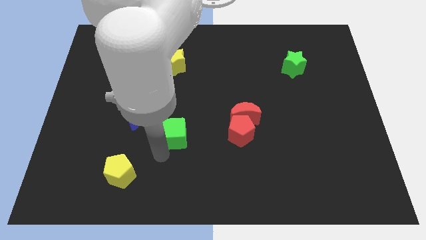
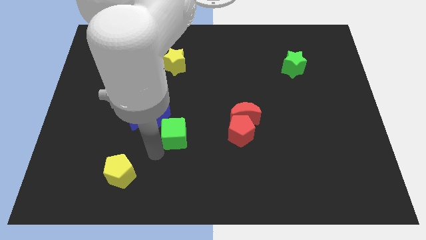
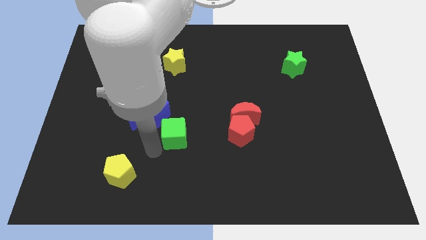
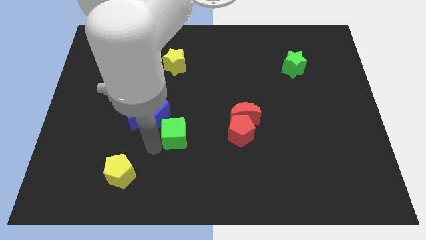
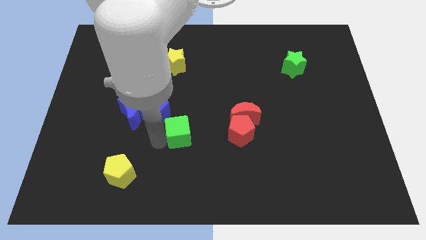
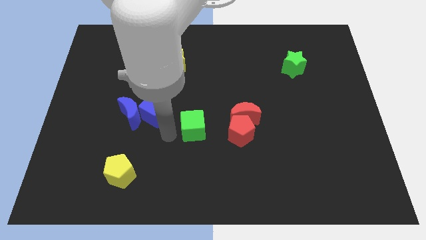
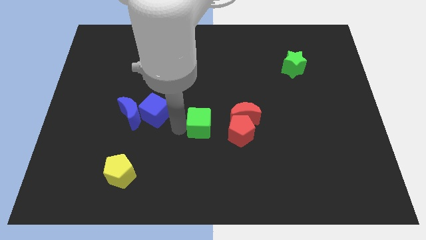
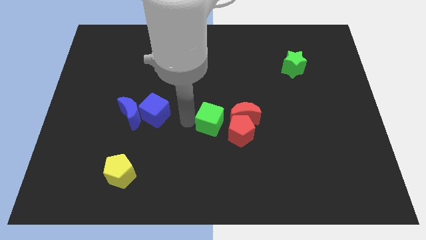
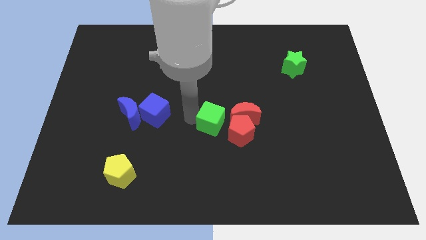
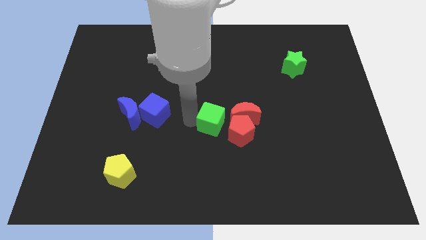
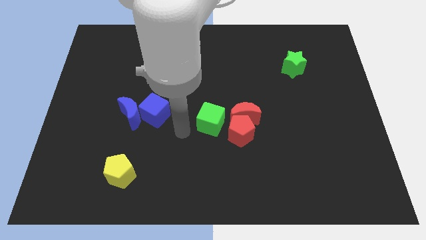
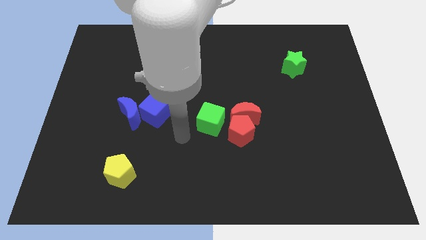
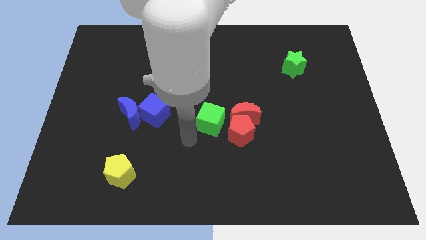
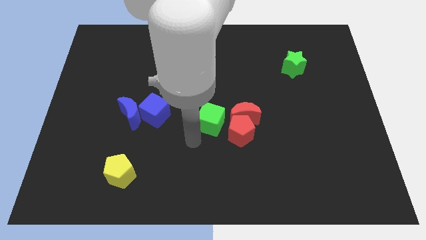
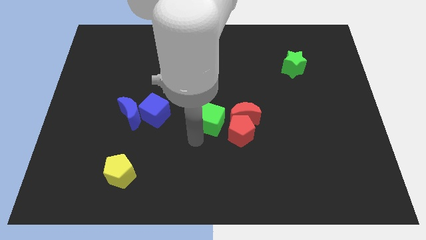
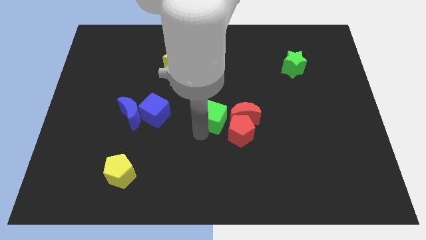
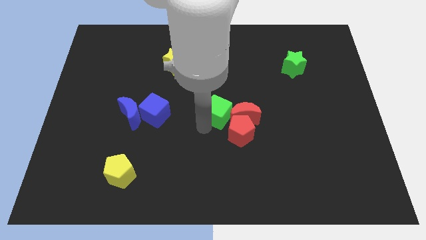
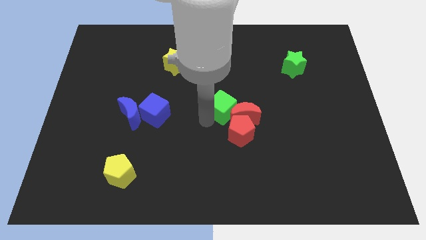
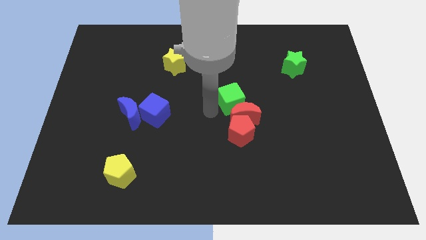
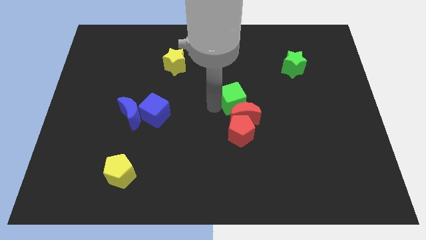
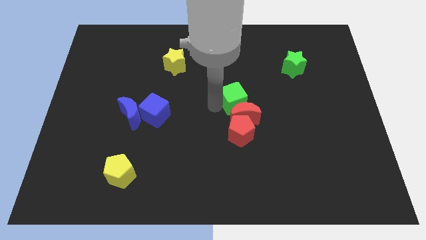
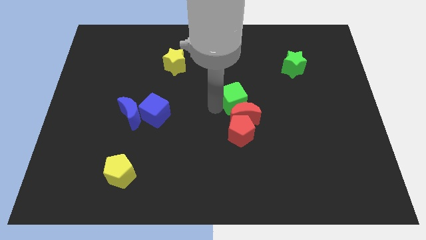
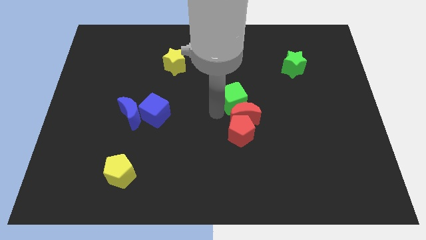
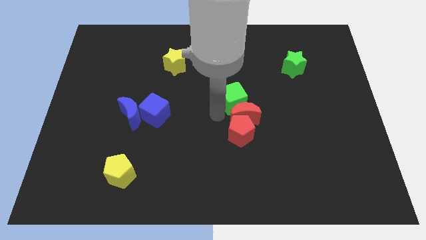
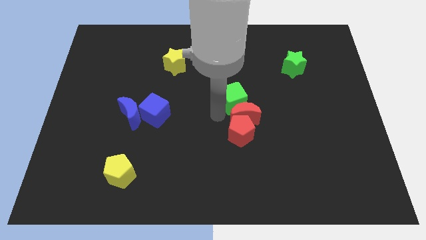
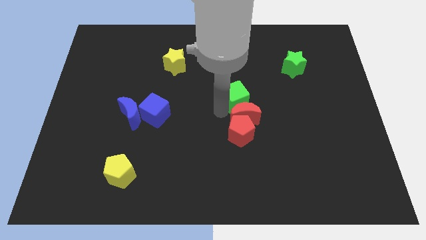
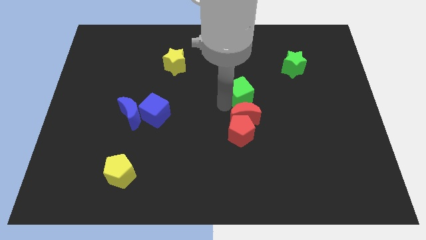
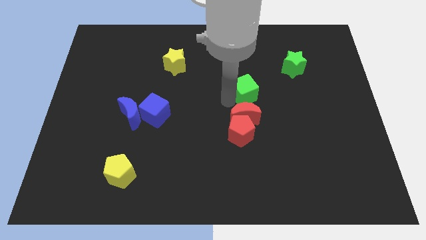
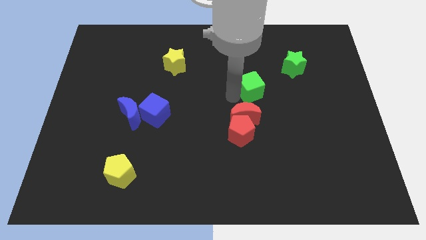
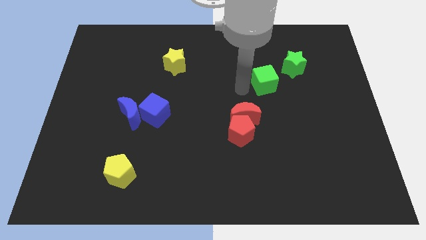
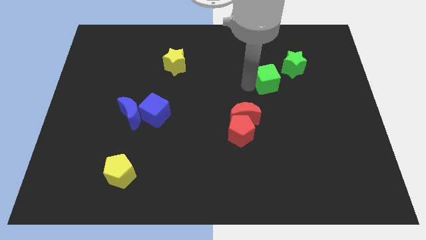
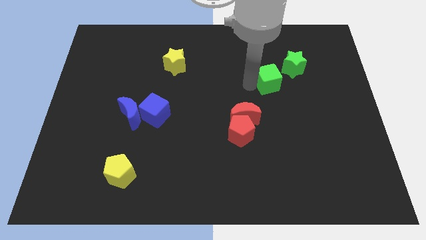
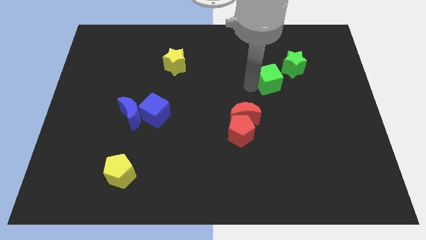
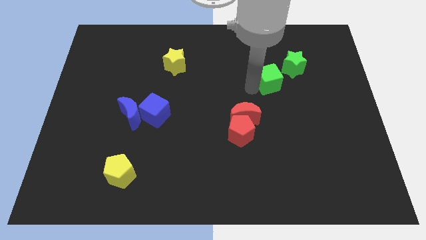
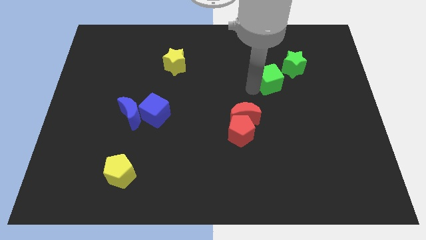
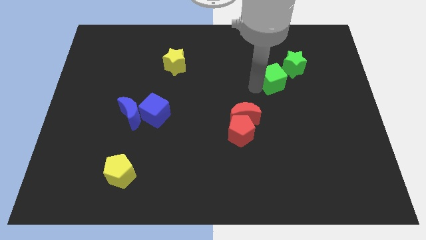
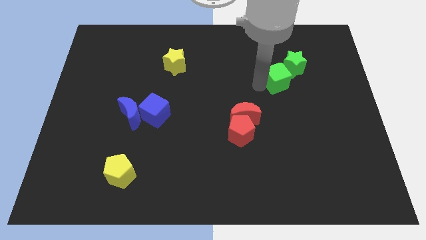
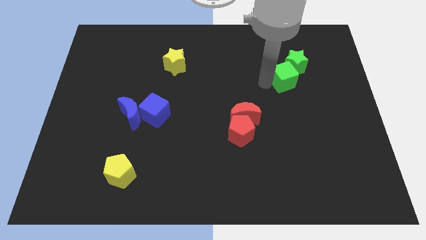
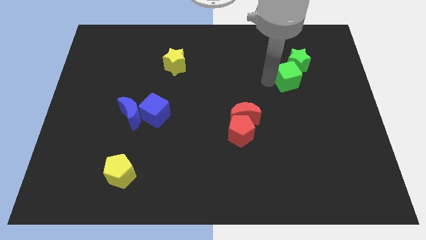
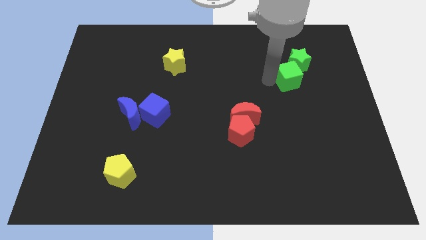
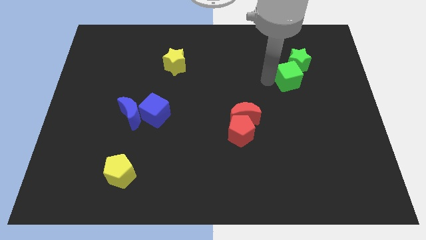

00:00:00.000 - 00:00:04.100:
add the green cube into the green star

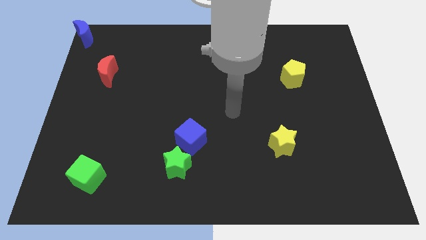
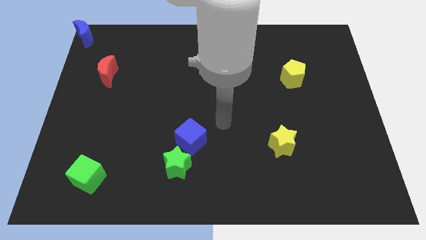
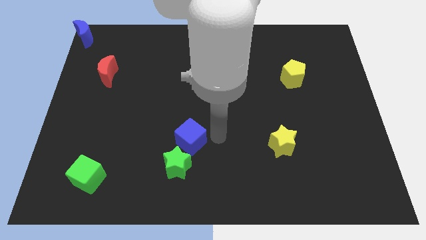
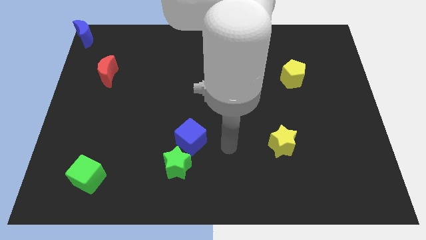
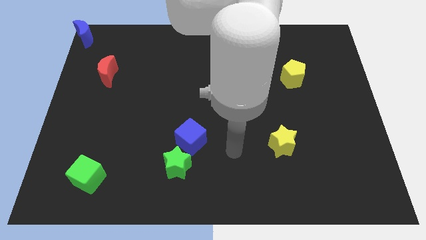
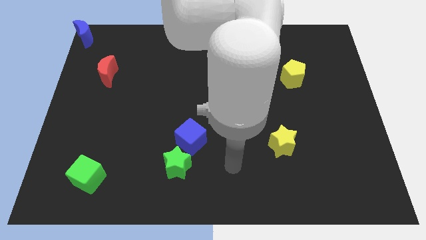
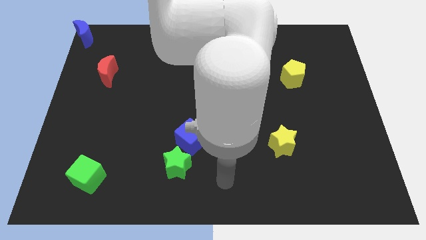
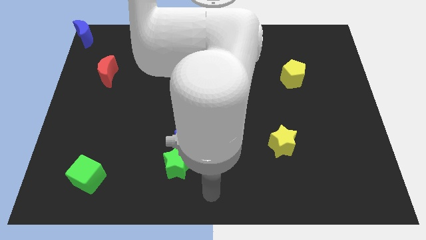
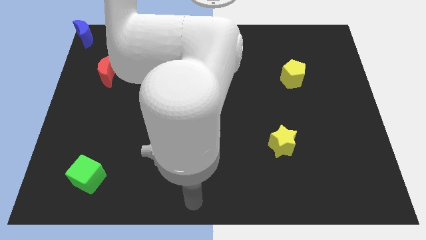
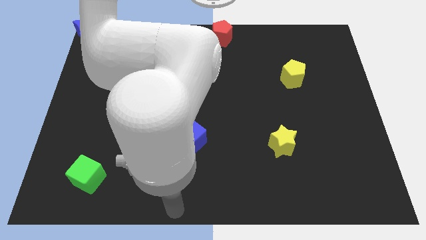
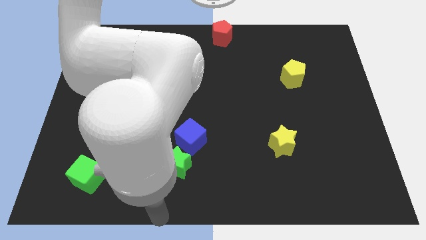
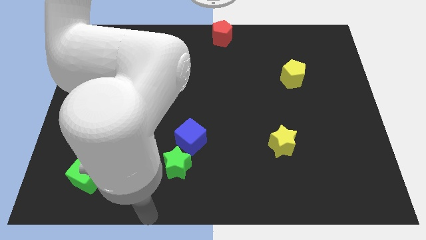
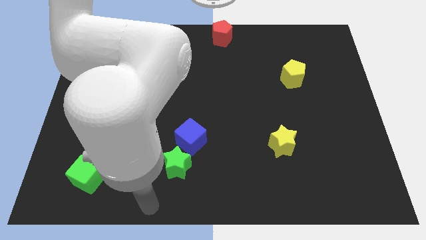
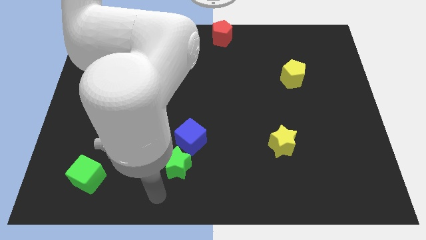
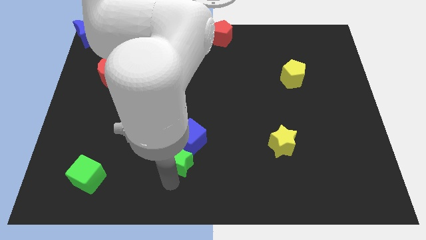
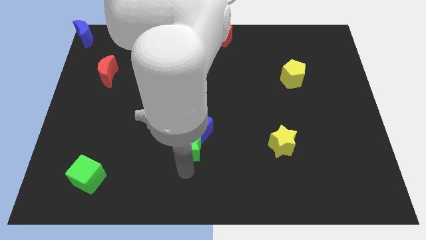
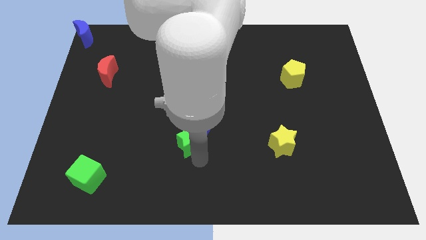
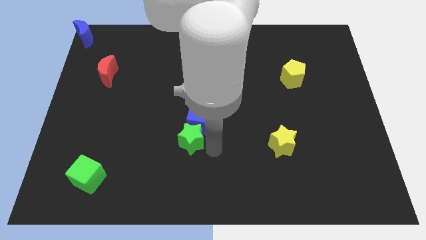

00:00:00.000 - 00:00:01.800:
push the green star and blue cube towards the center of the board

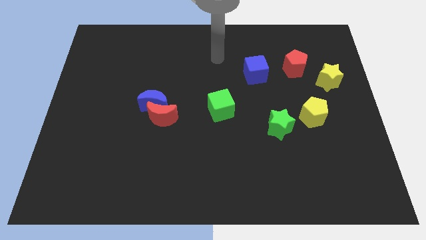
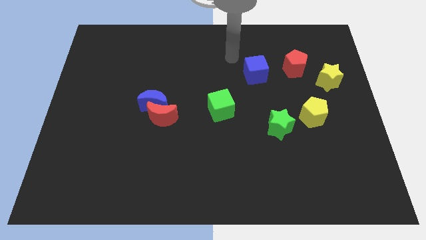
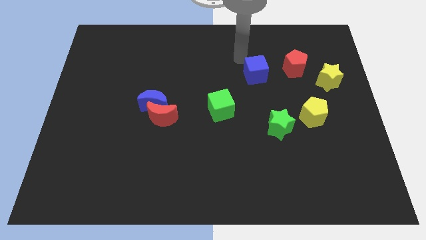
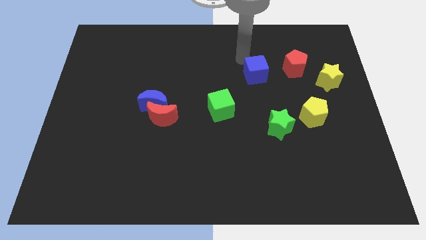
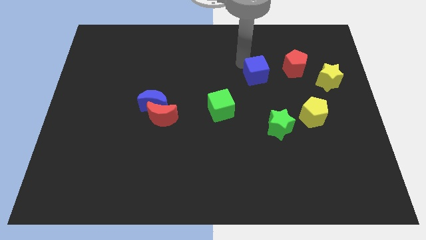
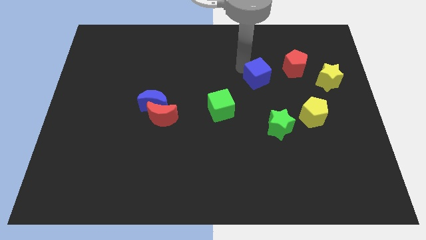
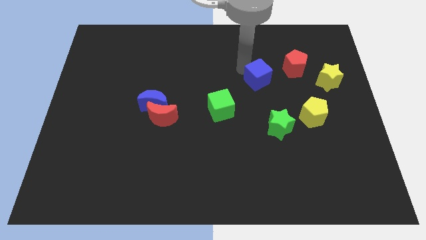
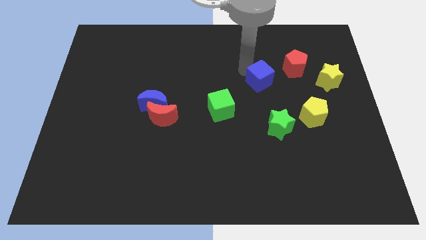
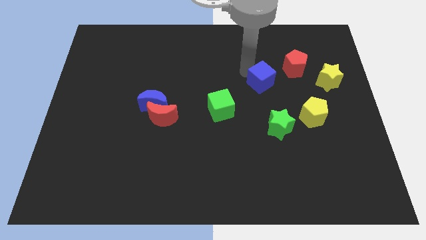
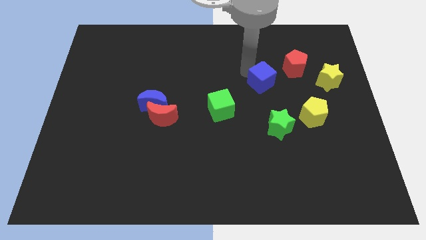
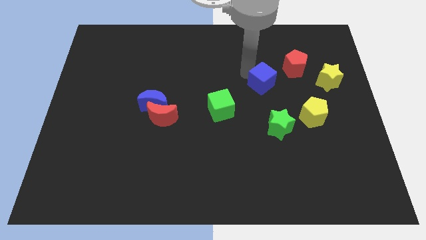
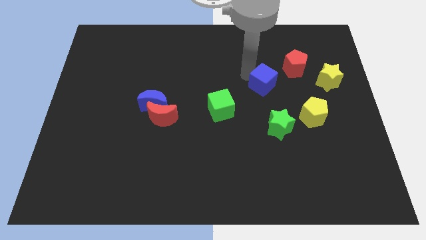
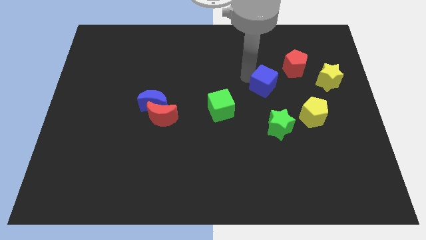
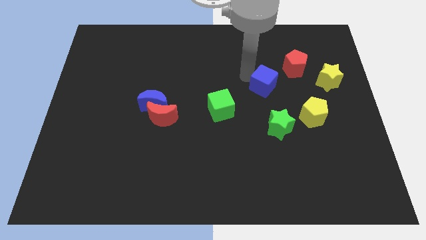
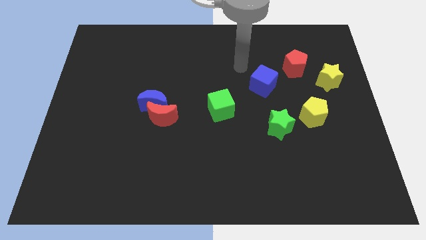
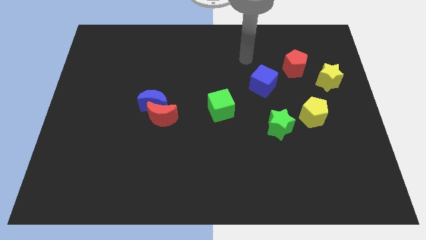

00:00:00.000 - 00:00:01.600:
adjust the blue cube to the center of the green cube and red pentagon

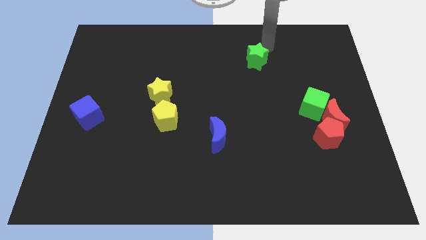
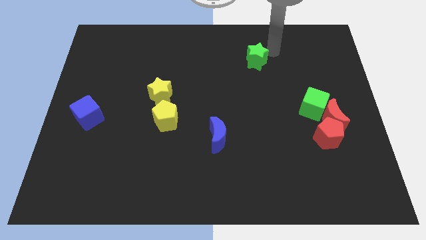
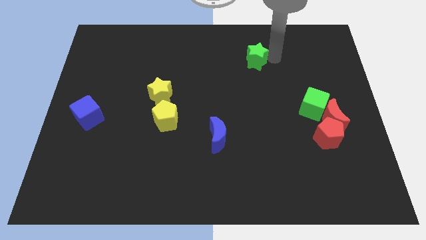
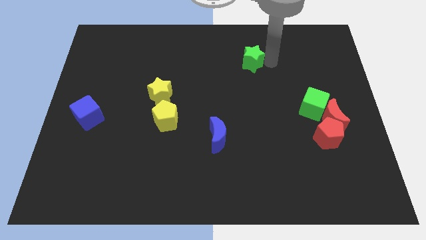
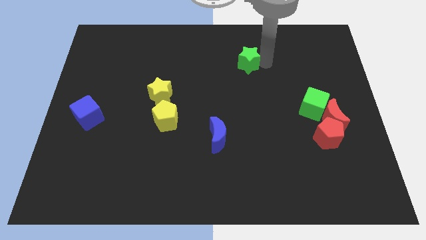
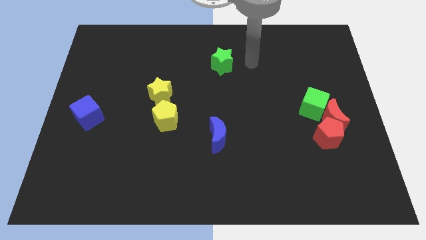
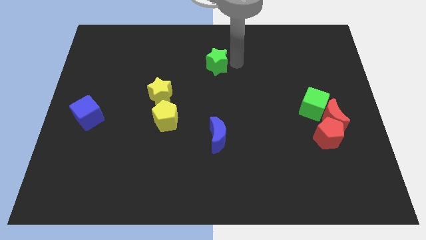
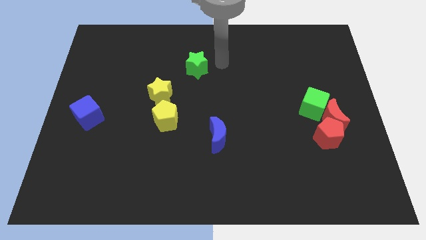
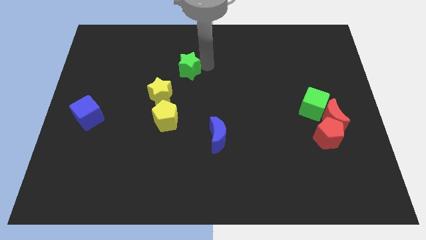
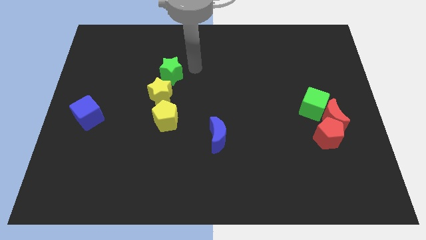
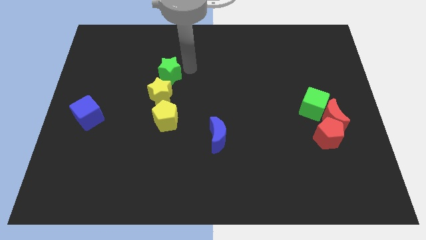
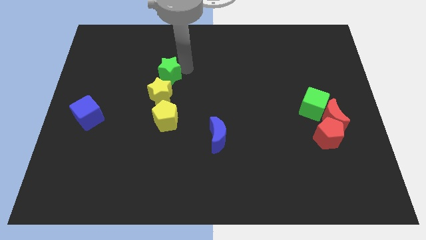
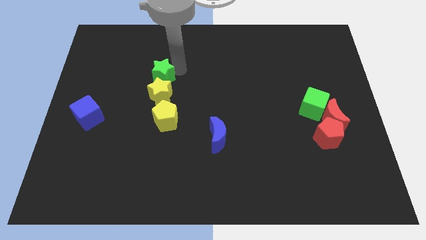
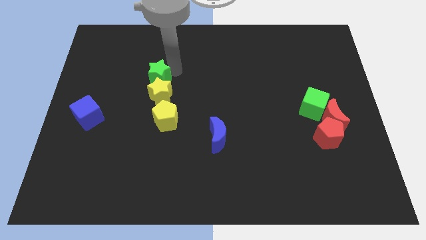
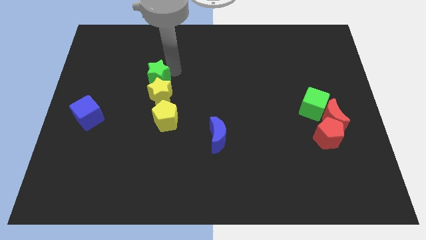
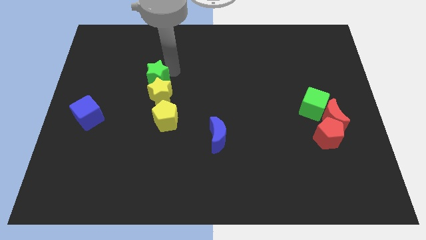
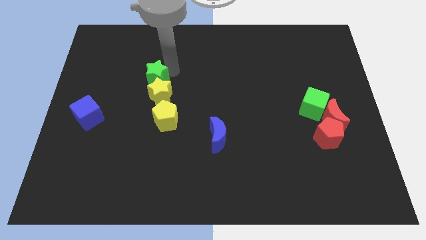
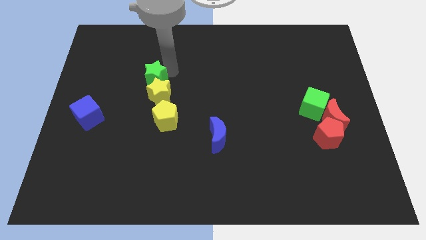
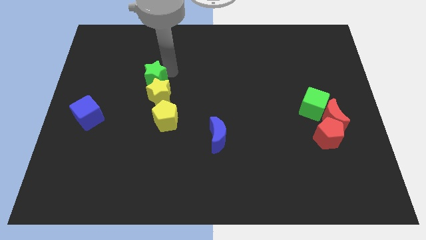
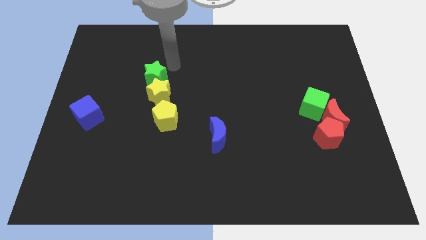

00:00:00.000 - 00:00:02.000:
move the green star to the top side of the yellow star
